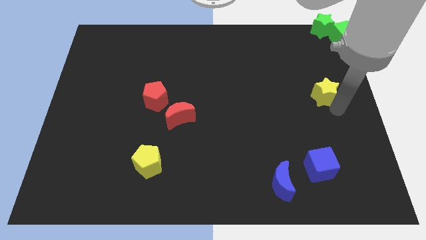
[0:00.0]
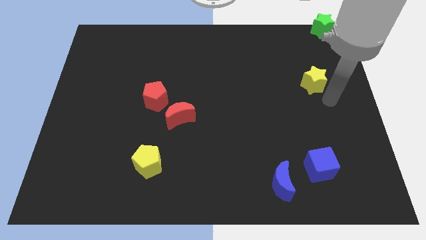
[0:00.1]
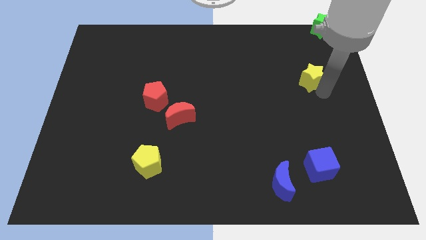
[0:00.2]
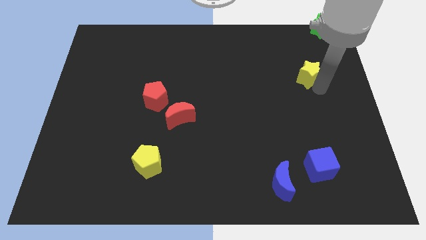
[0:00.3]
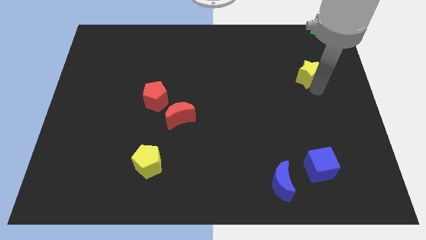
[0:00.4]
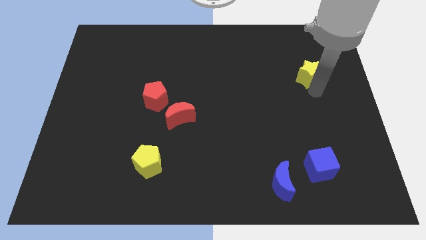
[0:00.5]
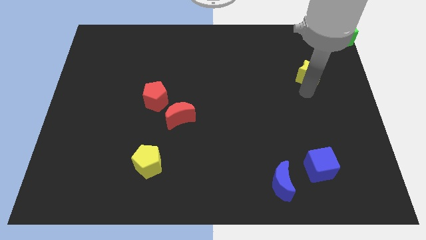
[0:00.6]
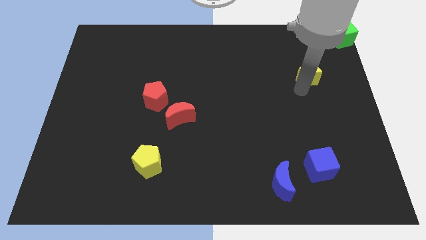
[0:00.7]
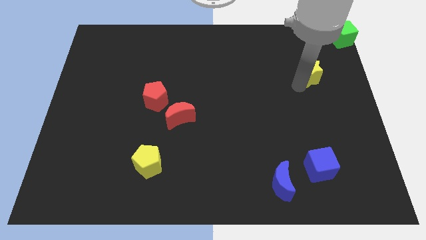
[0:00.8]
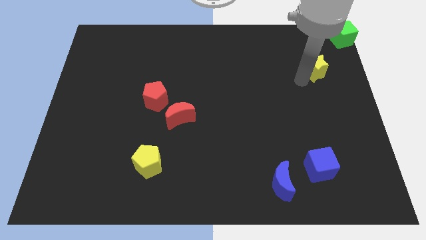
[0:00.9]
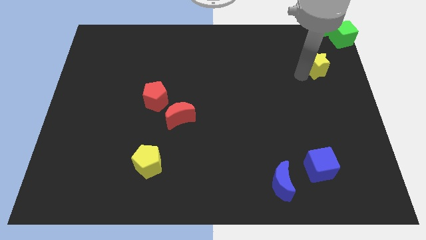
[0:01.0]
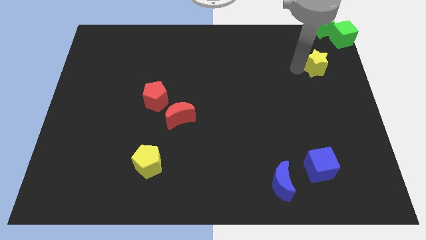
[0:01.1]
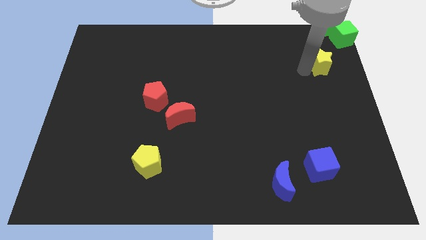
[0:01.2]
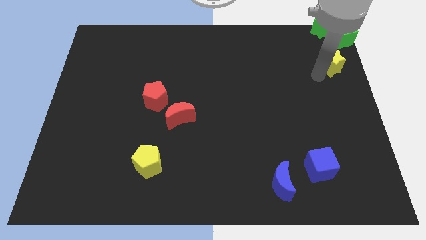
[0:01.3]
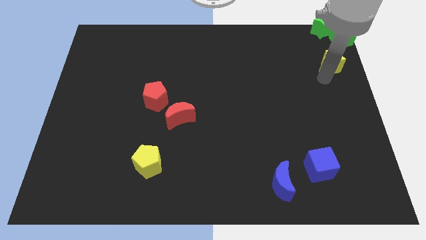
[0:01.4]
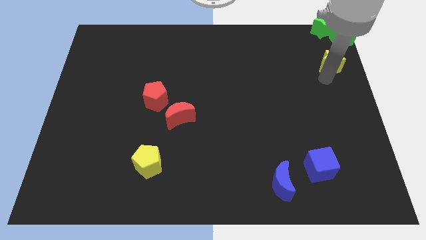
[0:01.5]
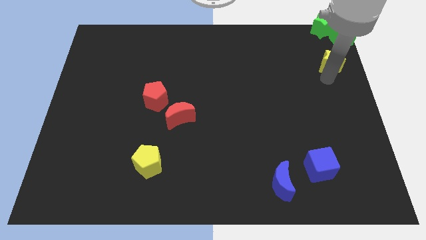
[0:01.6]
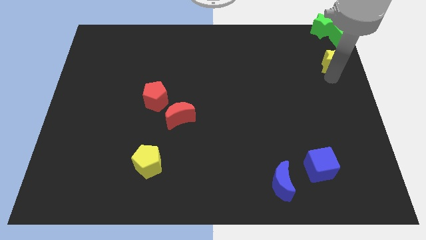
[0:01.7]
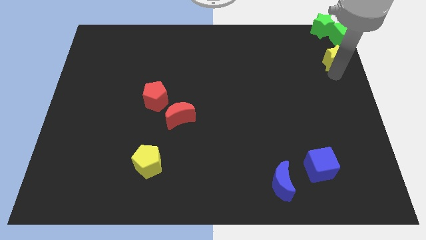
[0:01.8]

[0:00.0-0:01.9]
move the yellow star to the top right of the board

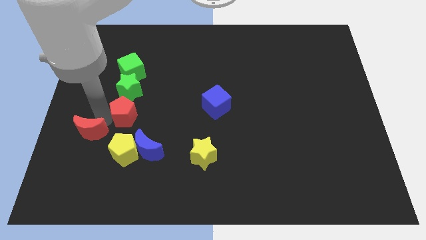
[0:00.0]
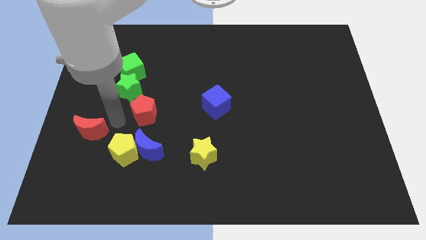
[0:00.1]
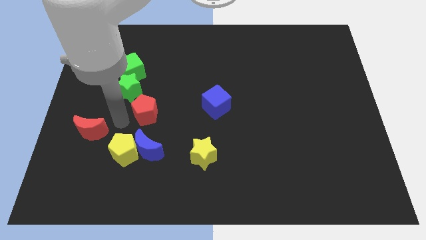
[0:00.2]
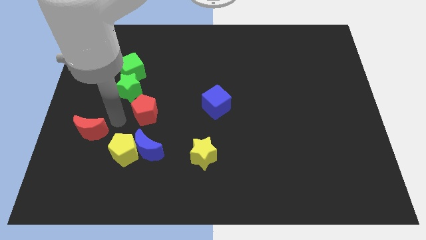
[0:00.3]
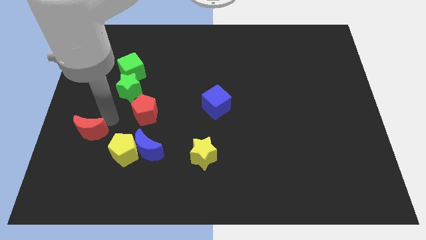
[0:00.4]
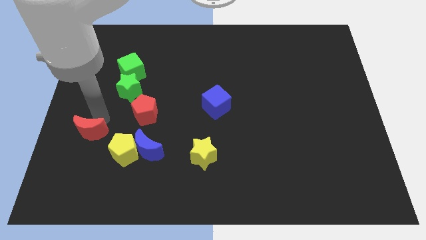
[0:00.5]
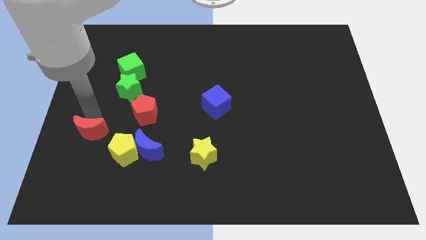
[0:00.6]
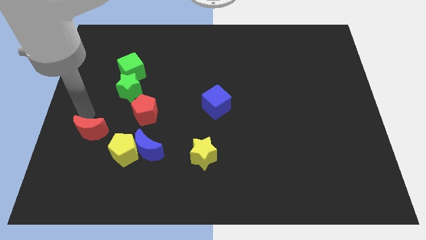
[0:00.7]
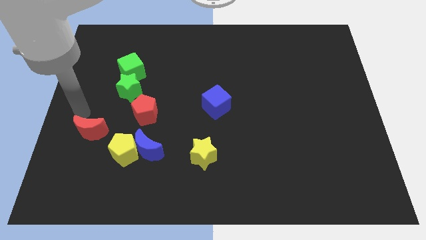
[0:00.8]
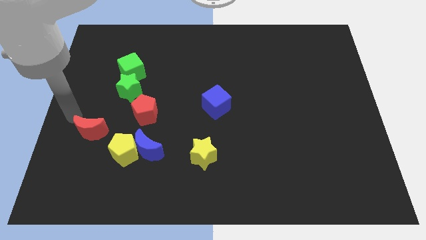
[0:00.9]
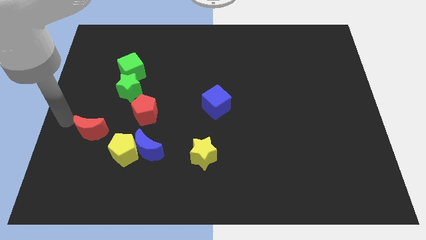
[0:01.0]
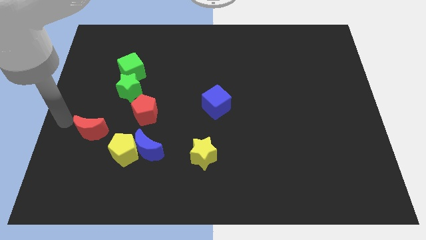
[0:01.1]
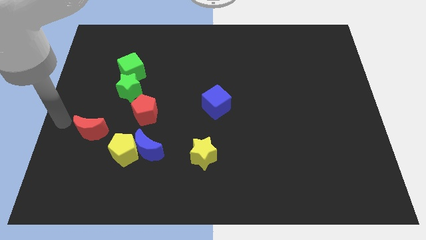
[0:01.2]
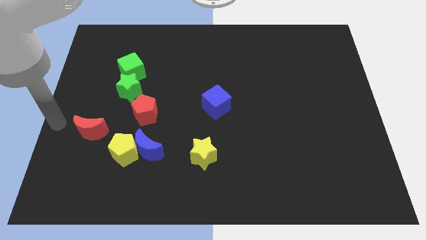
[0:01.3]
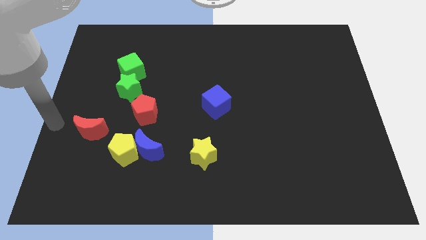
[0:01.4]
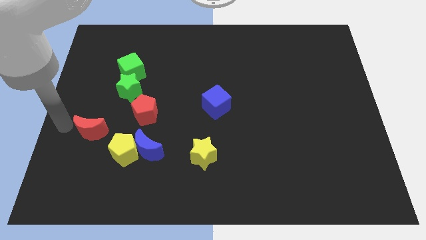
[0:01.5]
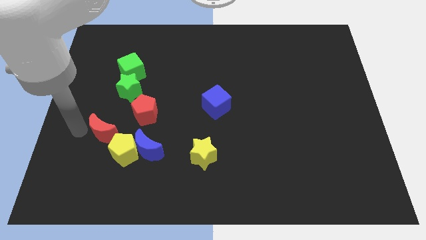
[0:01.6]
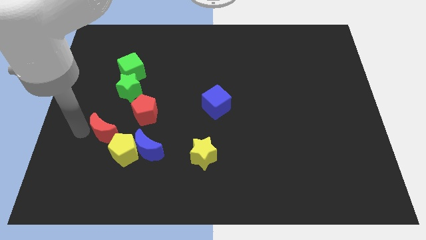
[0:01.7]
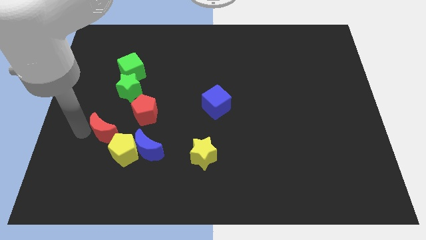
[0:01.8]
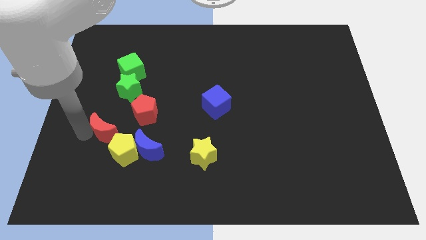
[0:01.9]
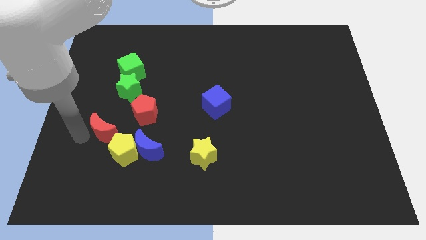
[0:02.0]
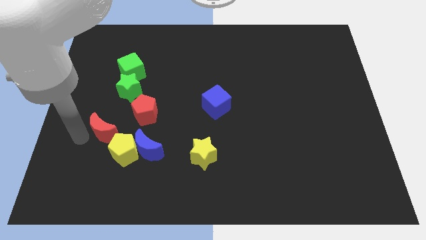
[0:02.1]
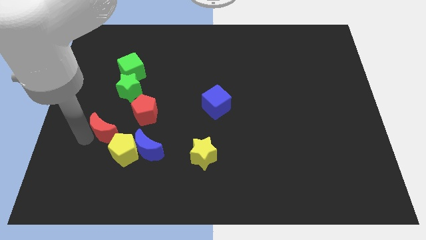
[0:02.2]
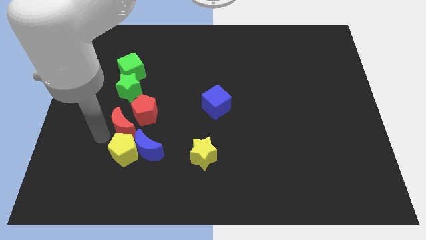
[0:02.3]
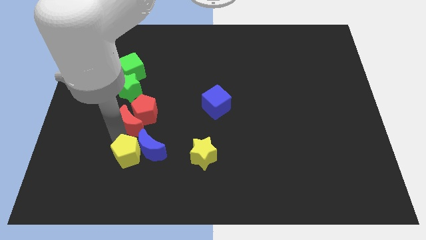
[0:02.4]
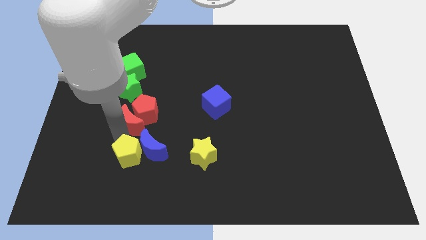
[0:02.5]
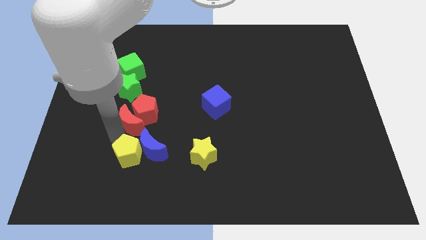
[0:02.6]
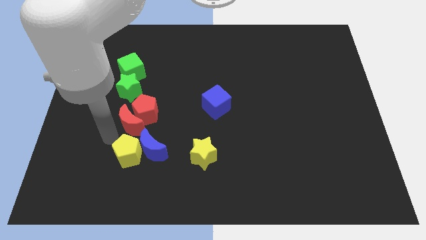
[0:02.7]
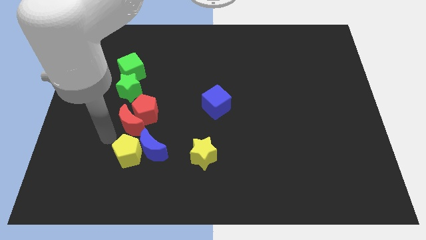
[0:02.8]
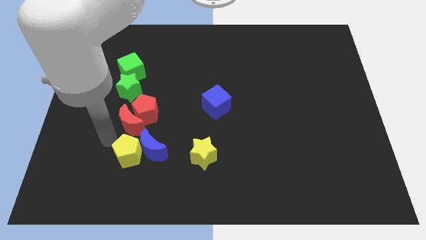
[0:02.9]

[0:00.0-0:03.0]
place red moon to the top of yellow pentagon

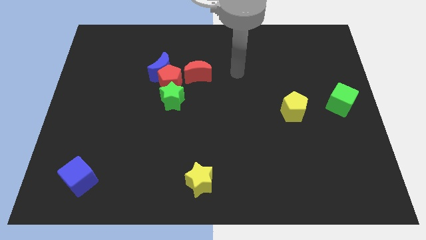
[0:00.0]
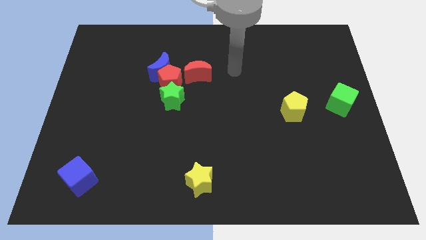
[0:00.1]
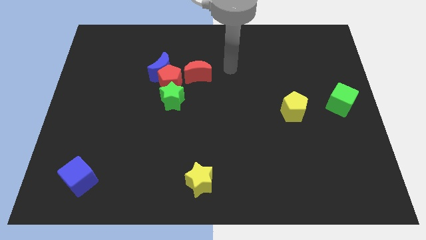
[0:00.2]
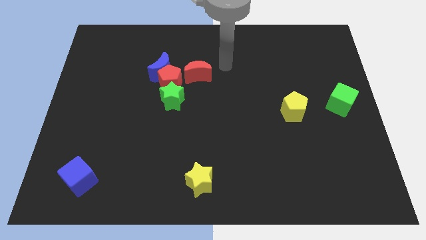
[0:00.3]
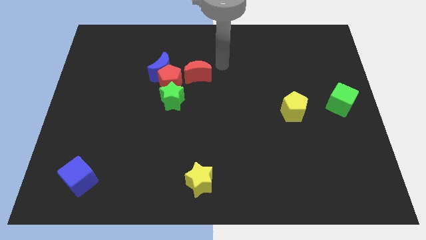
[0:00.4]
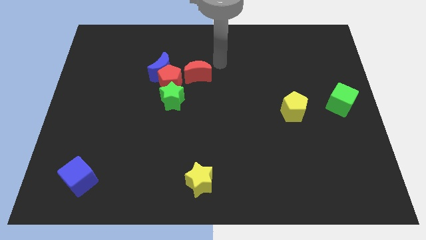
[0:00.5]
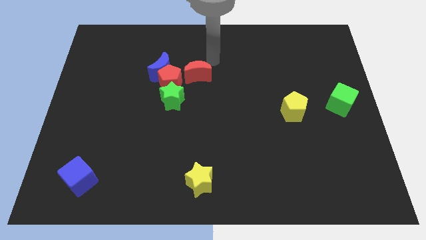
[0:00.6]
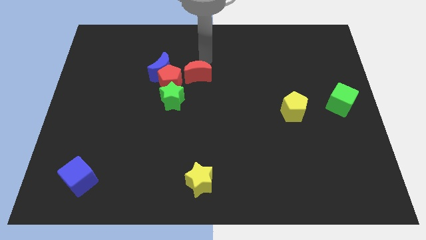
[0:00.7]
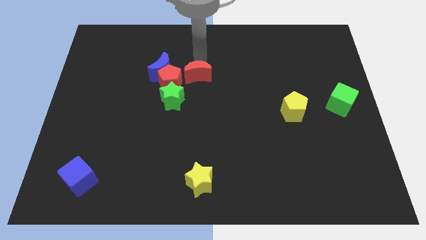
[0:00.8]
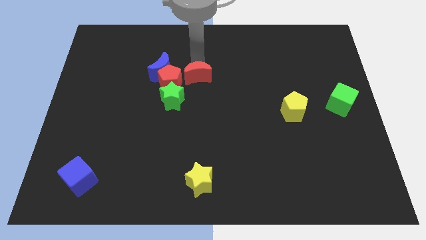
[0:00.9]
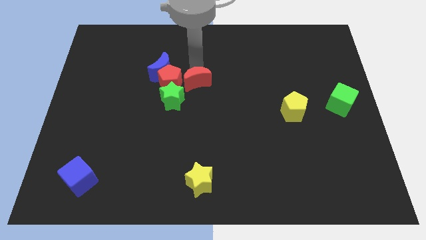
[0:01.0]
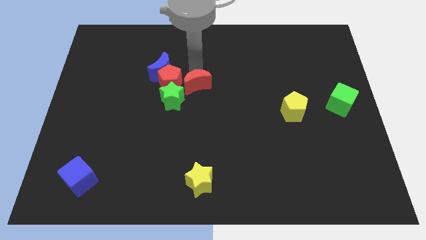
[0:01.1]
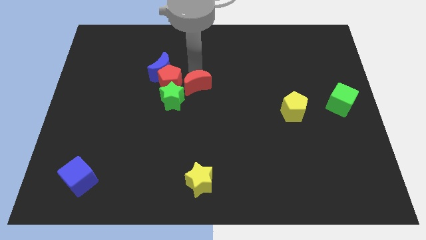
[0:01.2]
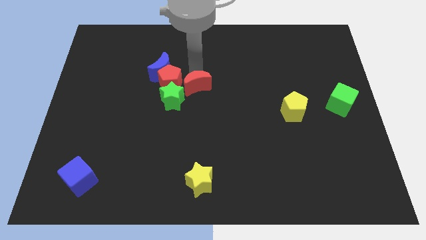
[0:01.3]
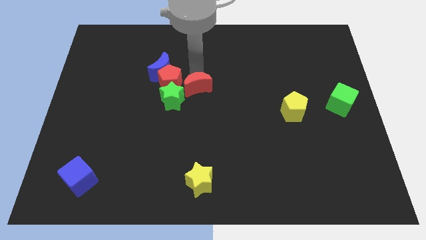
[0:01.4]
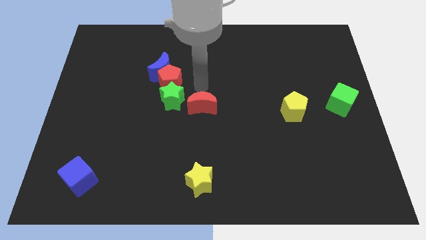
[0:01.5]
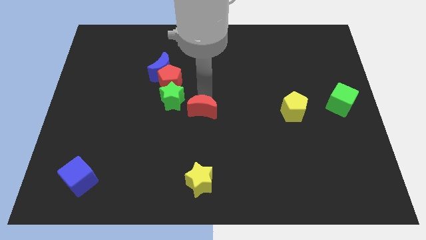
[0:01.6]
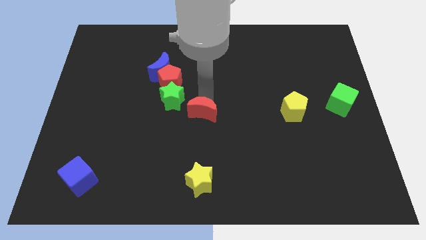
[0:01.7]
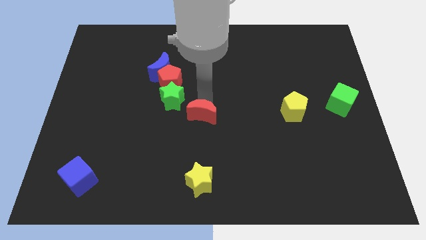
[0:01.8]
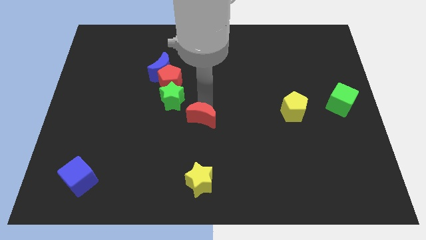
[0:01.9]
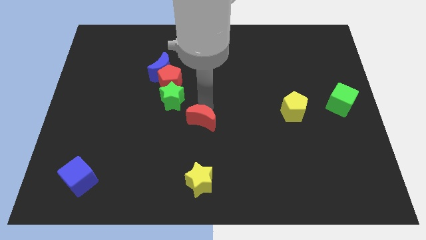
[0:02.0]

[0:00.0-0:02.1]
slide red moon to the center

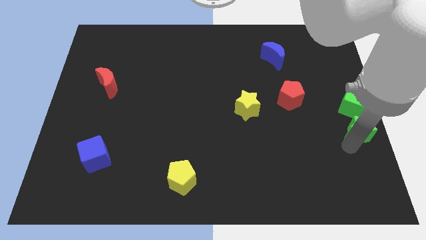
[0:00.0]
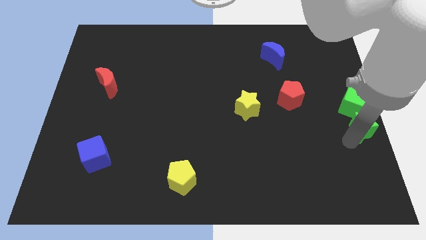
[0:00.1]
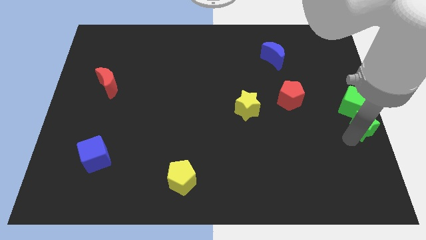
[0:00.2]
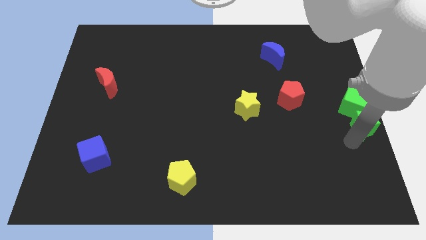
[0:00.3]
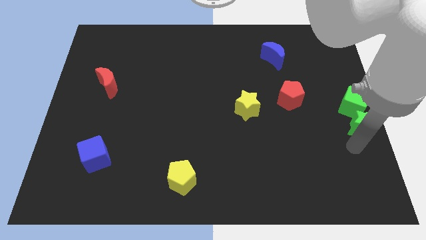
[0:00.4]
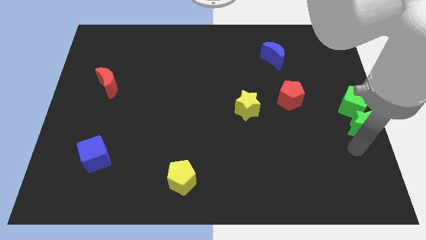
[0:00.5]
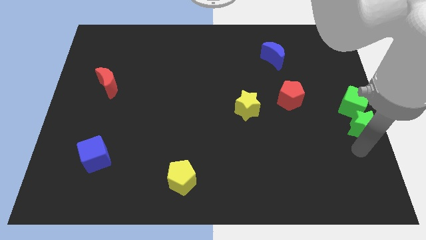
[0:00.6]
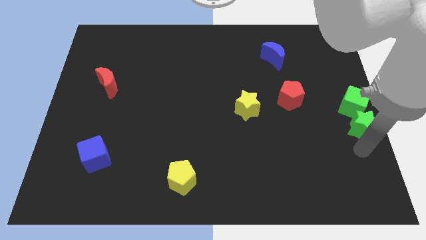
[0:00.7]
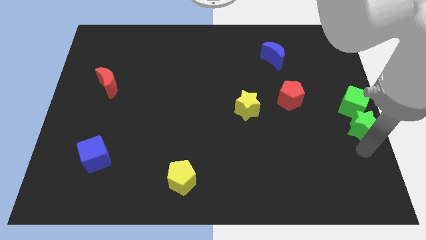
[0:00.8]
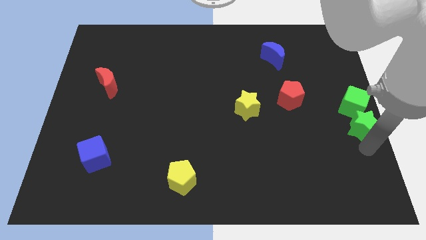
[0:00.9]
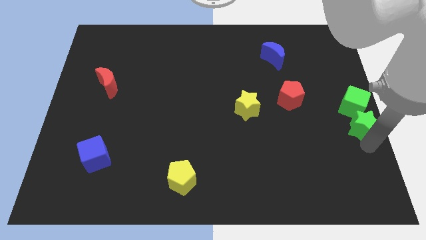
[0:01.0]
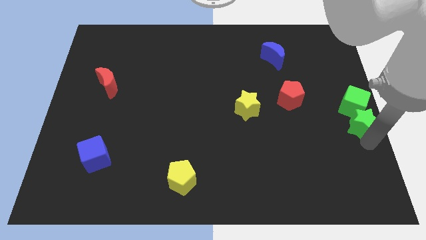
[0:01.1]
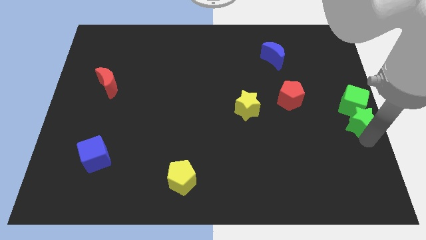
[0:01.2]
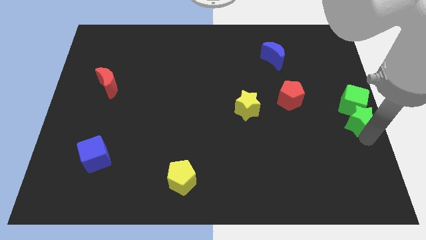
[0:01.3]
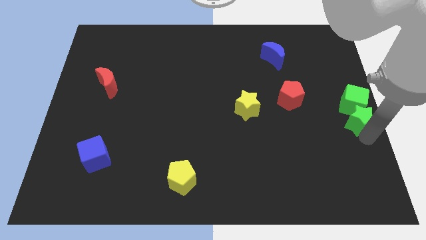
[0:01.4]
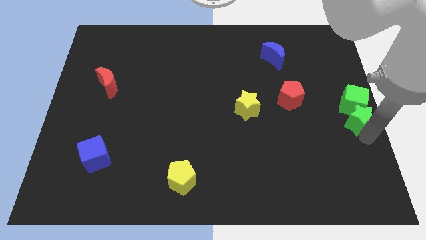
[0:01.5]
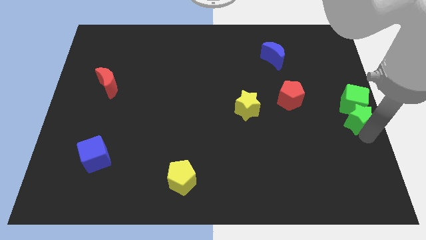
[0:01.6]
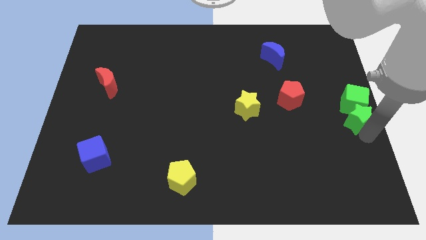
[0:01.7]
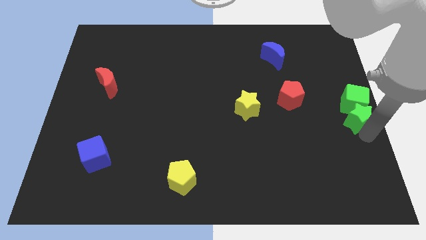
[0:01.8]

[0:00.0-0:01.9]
push the green star into the green cube
